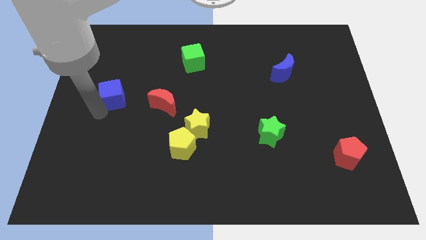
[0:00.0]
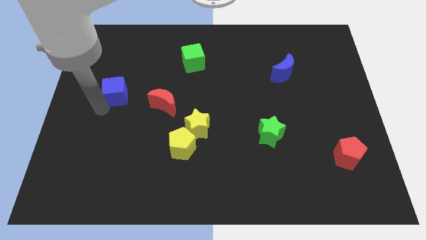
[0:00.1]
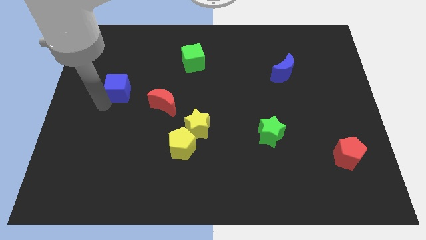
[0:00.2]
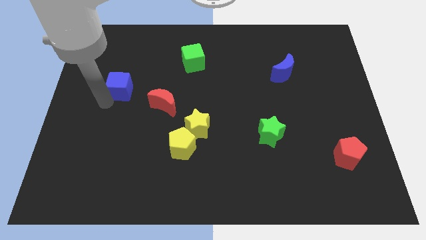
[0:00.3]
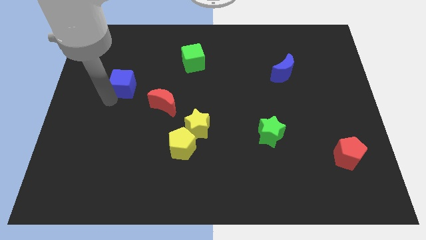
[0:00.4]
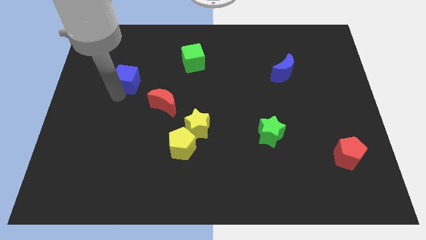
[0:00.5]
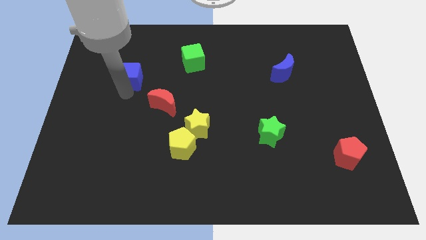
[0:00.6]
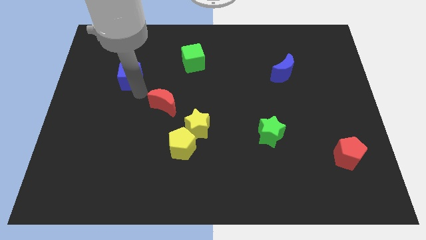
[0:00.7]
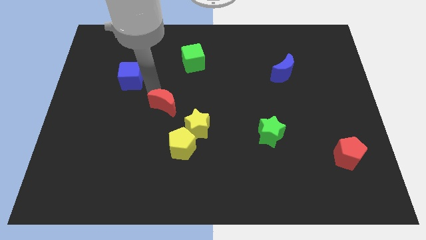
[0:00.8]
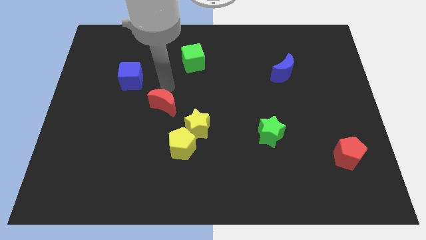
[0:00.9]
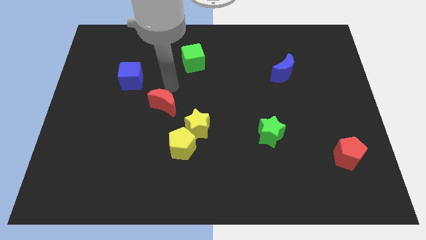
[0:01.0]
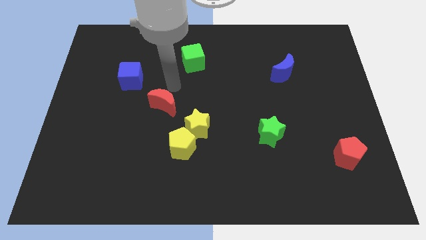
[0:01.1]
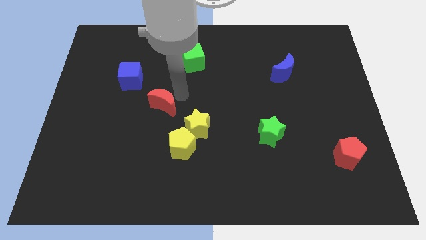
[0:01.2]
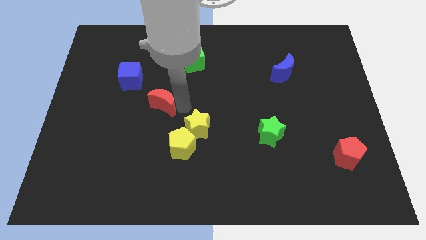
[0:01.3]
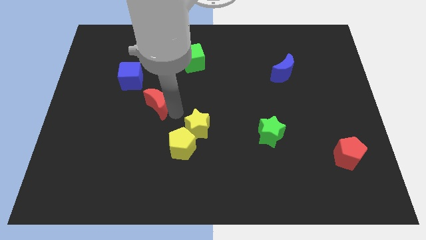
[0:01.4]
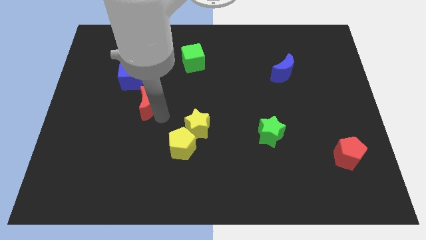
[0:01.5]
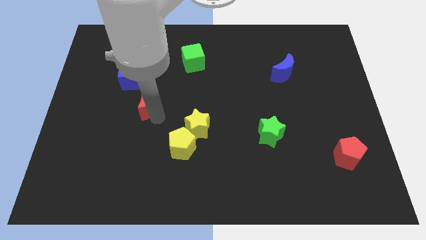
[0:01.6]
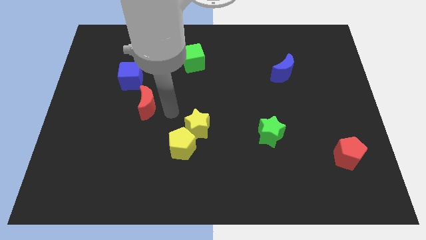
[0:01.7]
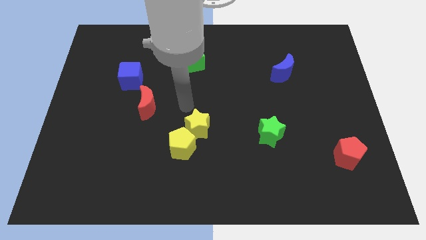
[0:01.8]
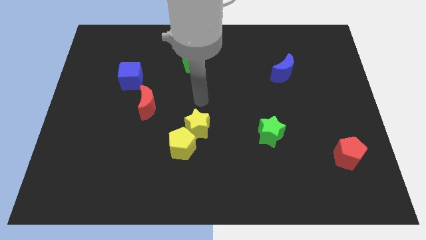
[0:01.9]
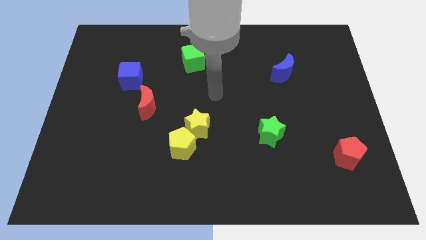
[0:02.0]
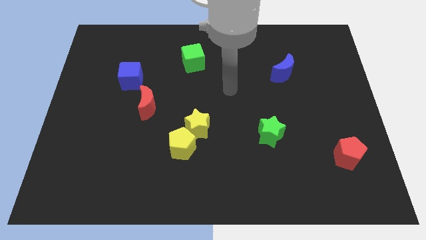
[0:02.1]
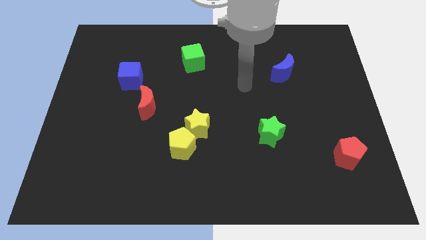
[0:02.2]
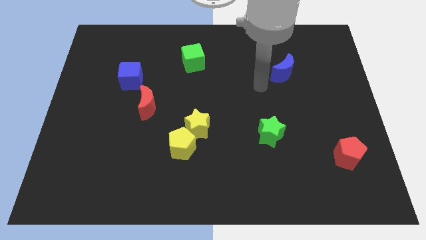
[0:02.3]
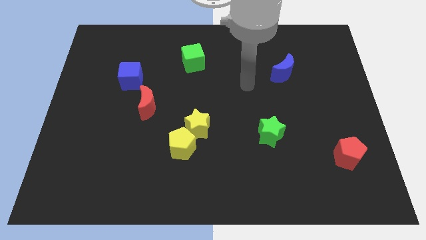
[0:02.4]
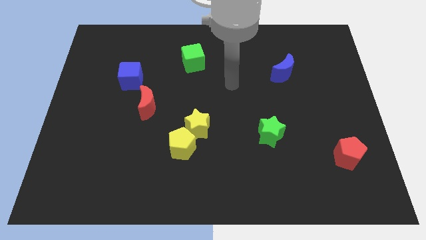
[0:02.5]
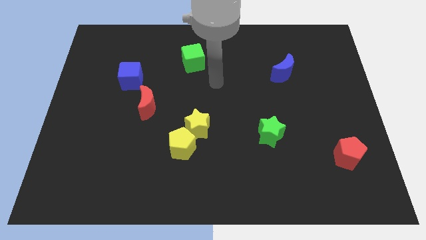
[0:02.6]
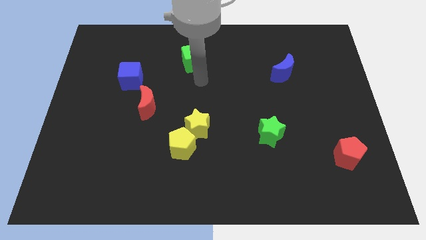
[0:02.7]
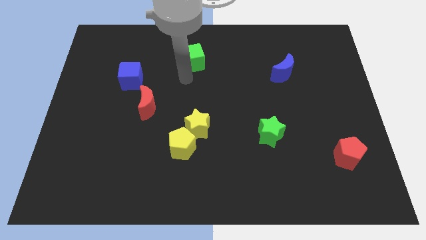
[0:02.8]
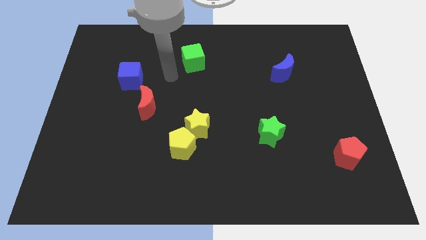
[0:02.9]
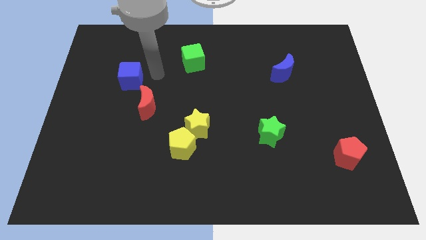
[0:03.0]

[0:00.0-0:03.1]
slide the blue cube towards up

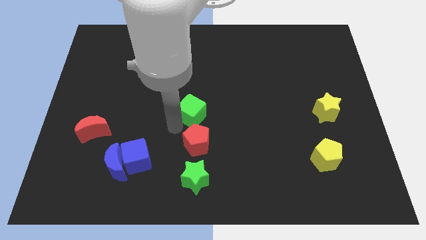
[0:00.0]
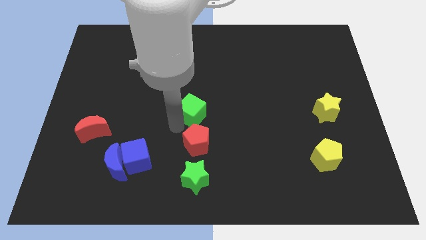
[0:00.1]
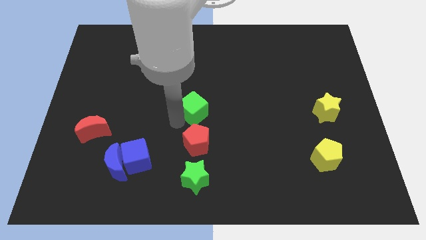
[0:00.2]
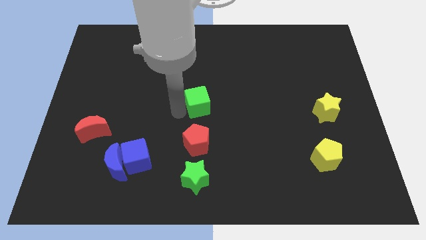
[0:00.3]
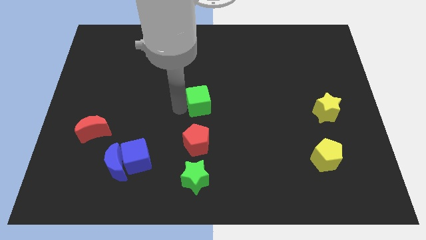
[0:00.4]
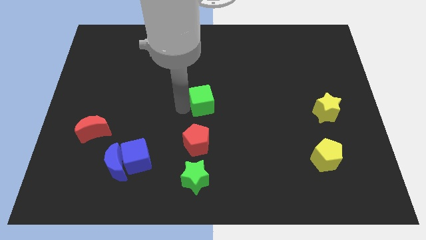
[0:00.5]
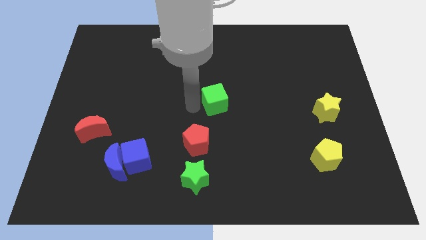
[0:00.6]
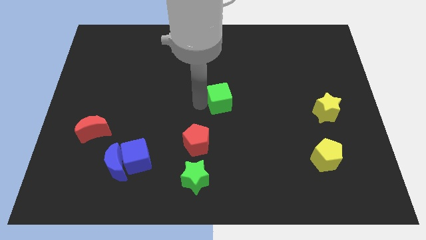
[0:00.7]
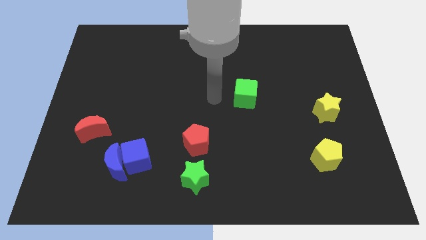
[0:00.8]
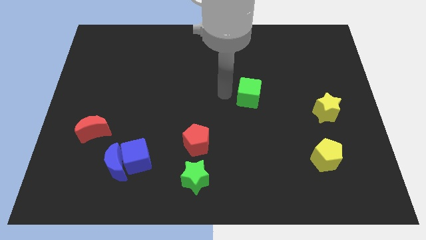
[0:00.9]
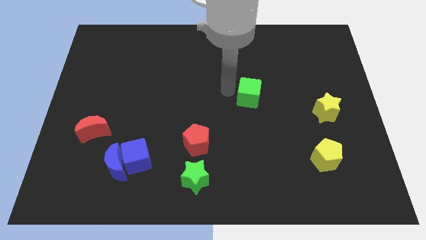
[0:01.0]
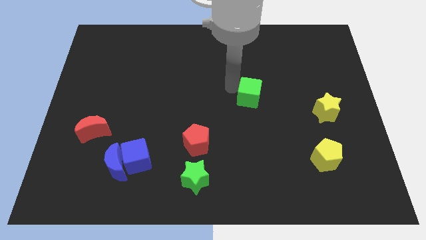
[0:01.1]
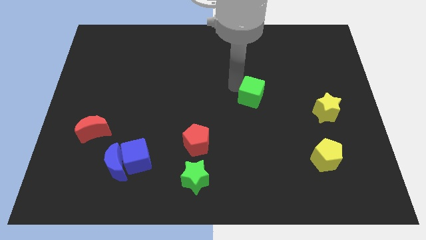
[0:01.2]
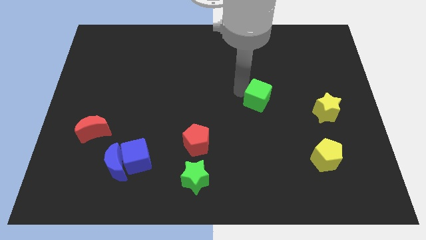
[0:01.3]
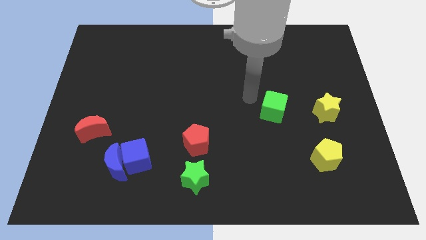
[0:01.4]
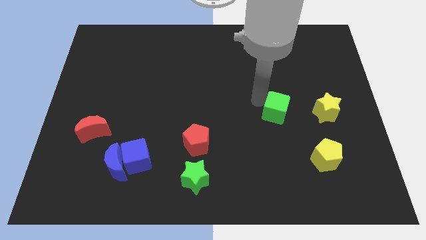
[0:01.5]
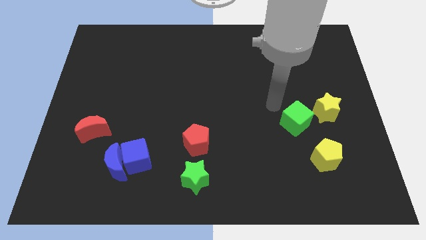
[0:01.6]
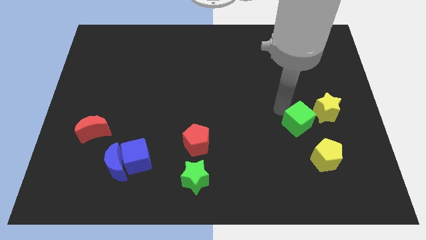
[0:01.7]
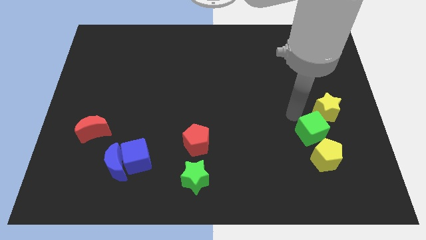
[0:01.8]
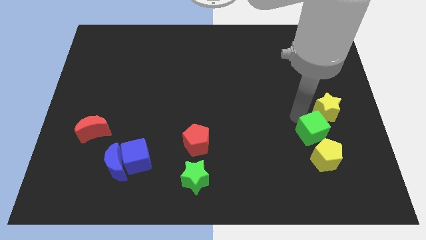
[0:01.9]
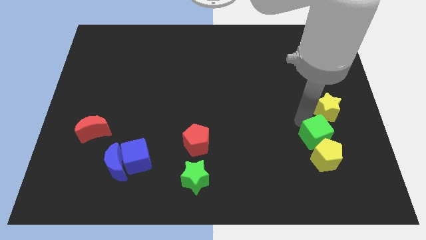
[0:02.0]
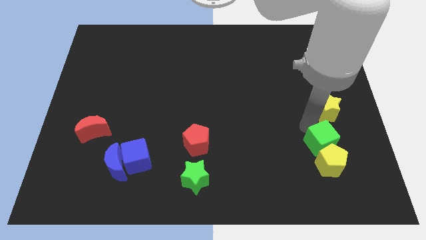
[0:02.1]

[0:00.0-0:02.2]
move the green cube above the yellow pentagon

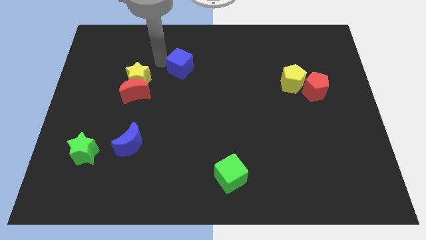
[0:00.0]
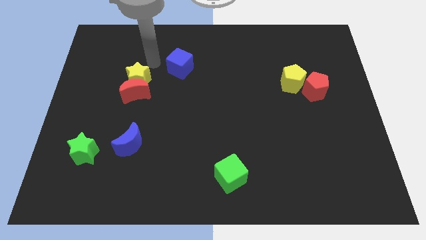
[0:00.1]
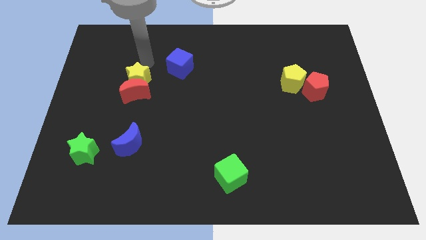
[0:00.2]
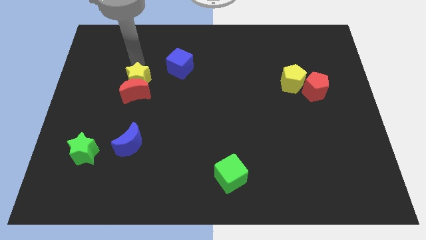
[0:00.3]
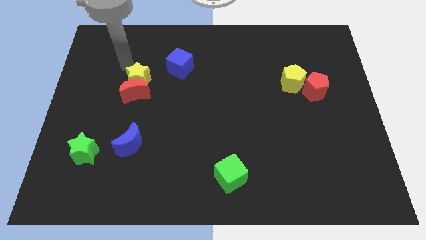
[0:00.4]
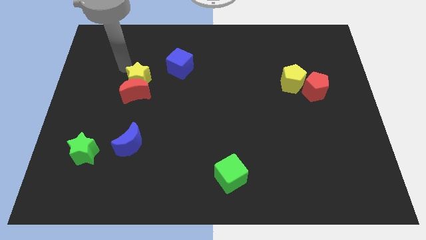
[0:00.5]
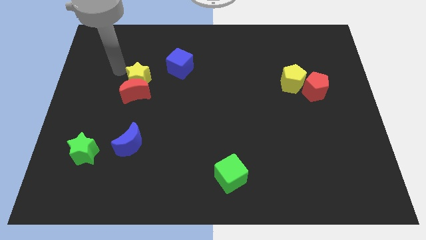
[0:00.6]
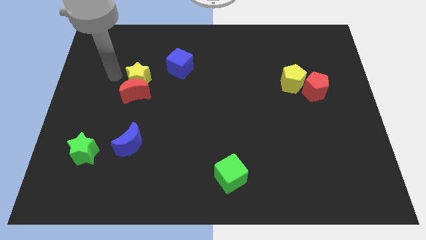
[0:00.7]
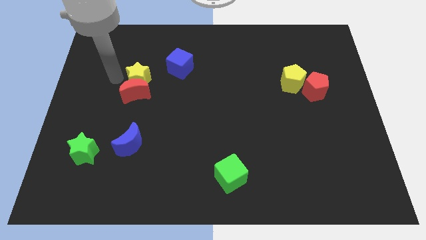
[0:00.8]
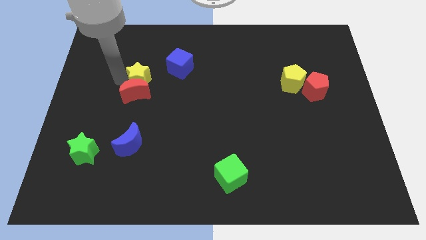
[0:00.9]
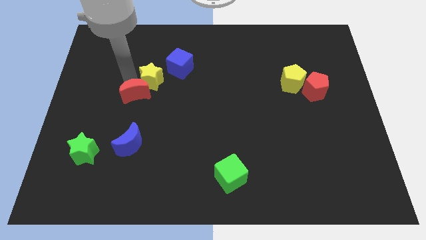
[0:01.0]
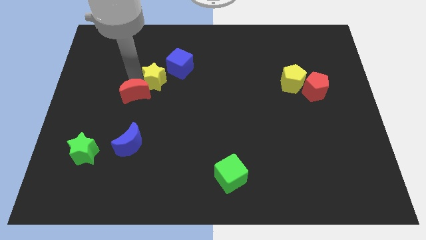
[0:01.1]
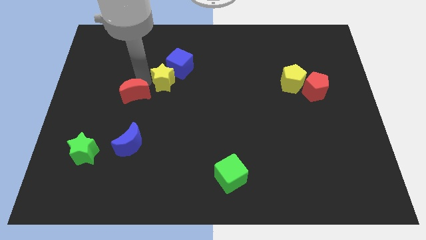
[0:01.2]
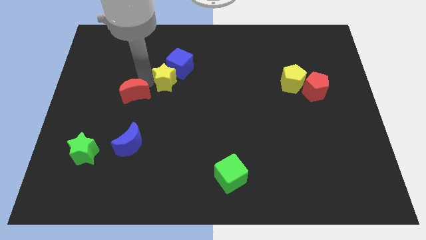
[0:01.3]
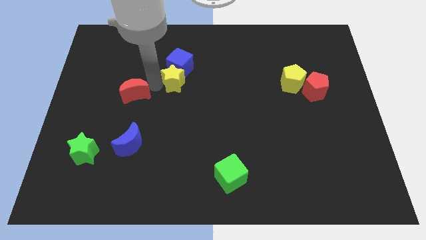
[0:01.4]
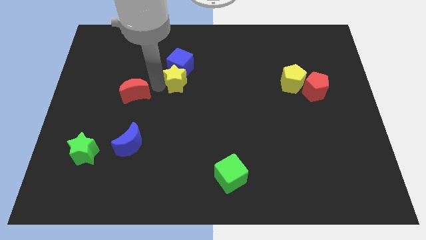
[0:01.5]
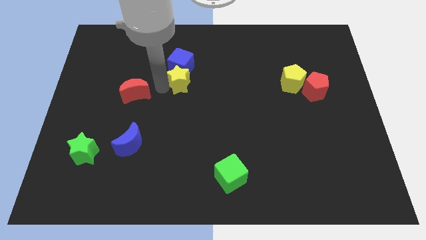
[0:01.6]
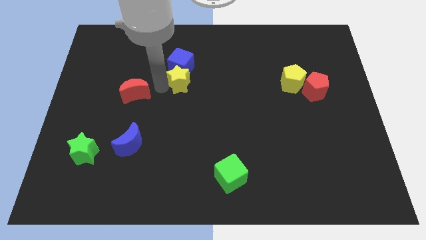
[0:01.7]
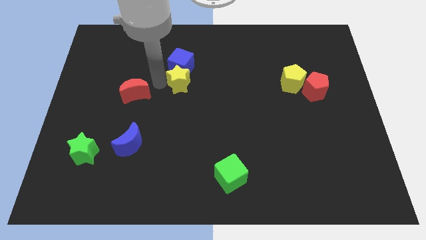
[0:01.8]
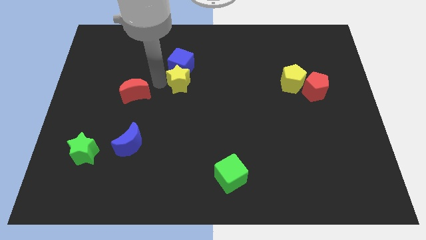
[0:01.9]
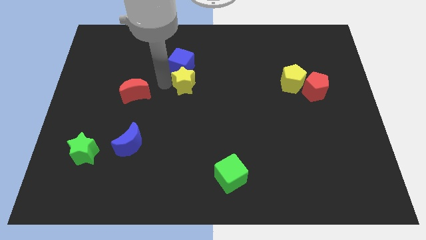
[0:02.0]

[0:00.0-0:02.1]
move the yellow star at the bottom of the blue cube

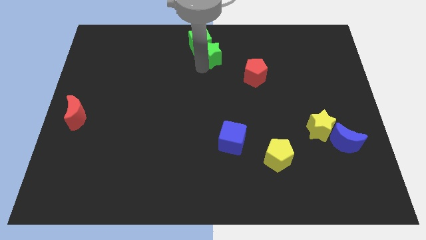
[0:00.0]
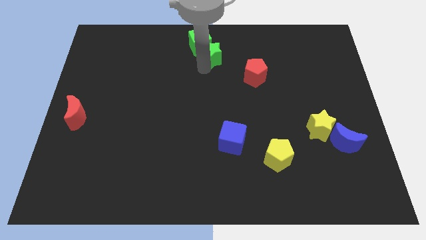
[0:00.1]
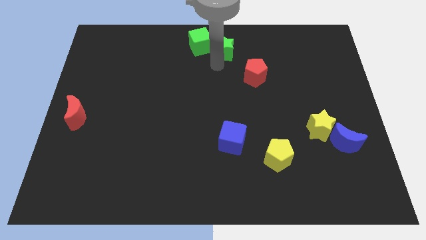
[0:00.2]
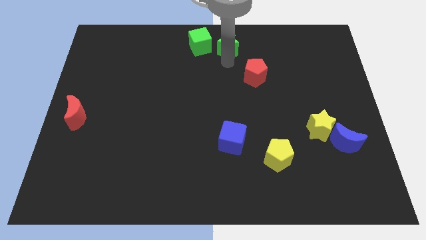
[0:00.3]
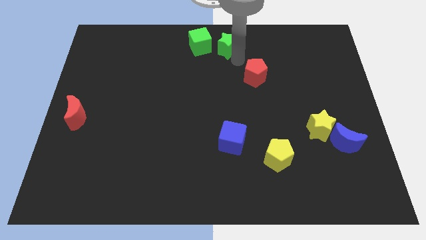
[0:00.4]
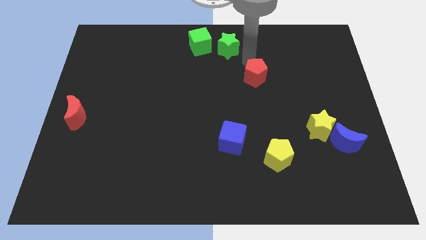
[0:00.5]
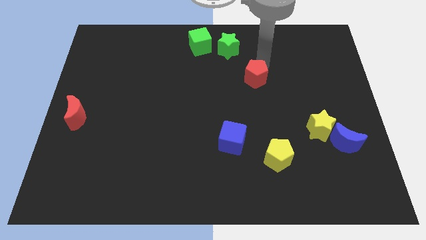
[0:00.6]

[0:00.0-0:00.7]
move the green star to the right side of the green cube

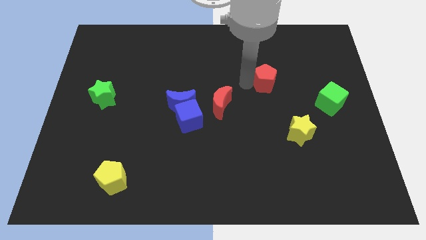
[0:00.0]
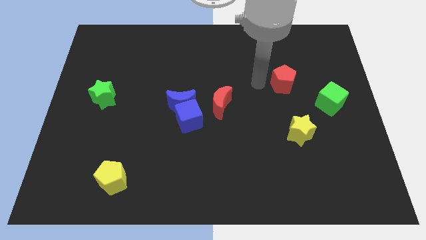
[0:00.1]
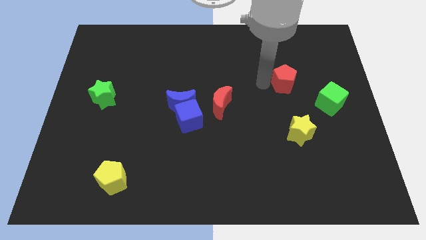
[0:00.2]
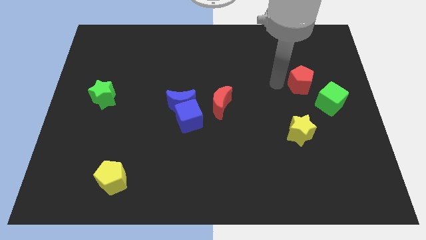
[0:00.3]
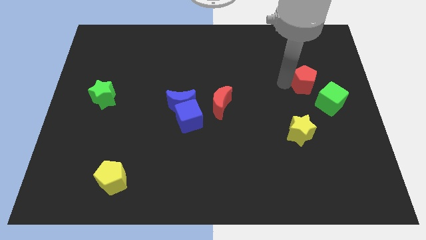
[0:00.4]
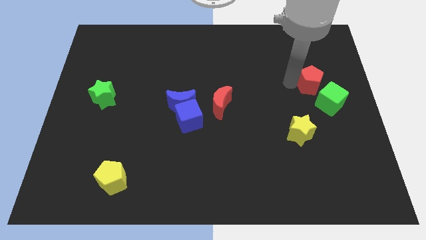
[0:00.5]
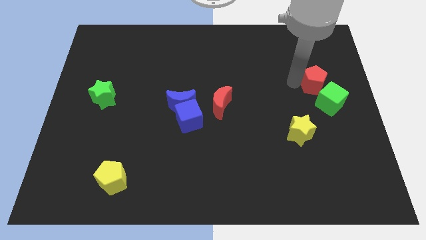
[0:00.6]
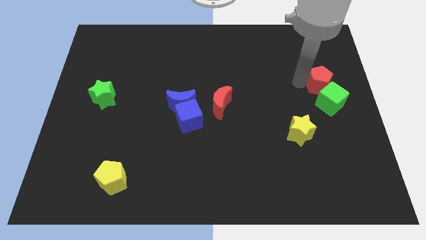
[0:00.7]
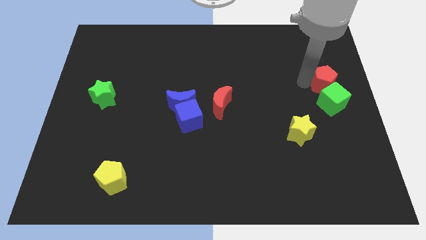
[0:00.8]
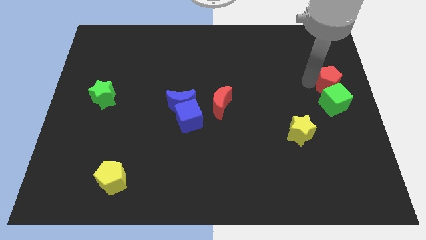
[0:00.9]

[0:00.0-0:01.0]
move the red pentagon into the green cube
